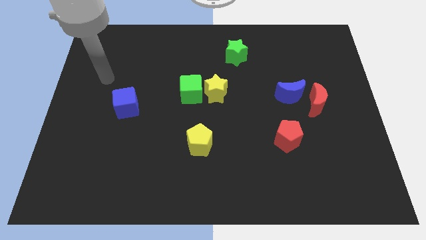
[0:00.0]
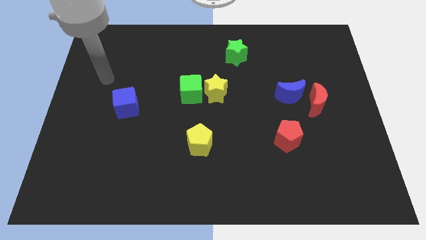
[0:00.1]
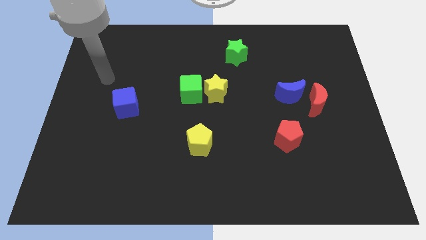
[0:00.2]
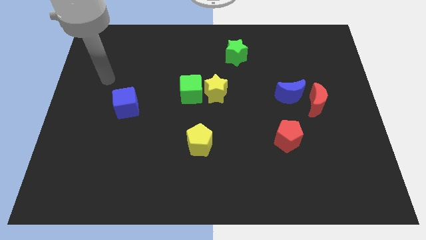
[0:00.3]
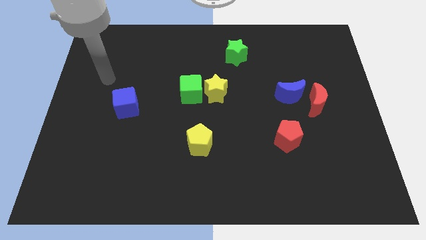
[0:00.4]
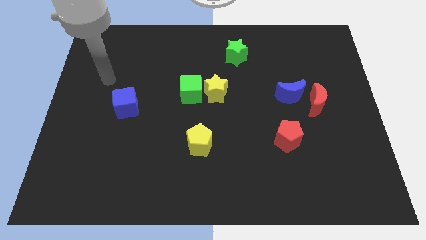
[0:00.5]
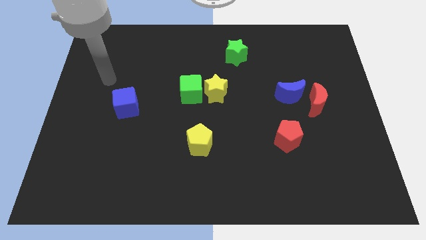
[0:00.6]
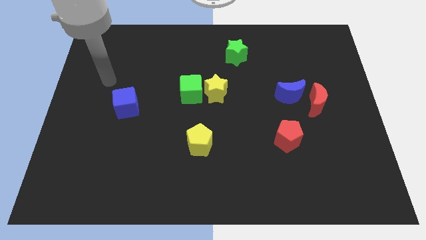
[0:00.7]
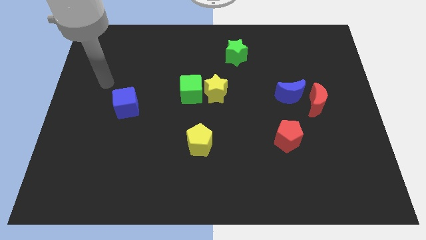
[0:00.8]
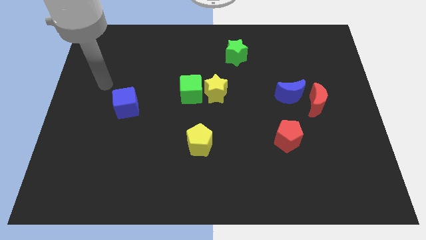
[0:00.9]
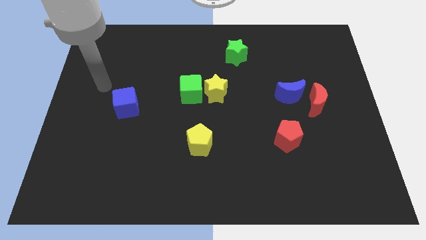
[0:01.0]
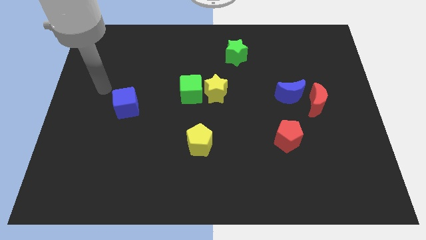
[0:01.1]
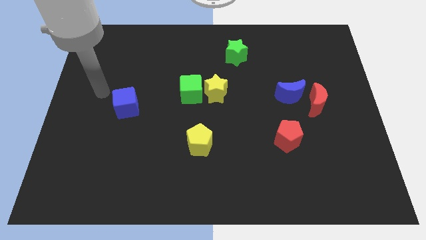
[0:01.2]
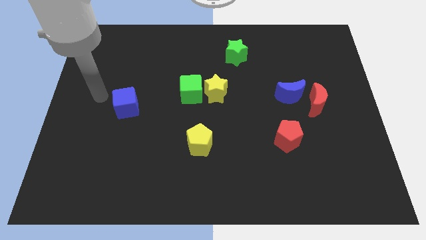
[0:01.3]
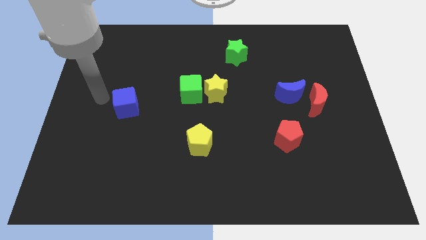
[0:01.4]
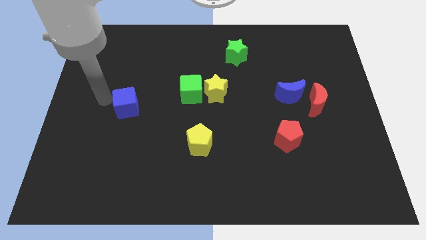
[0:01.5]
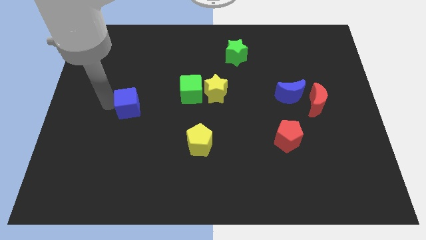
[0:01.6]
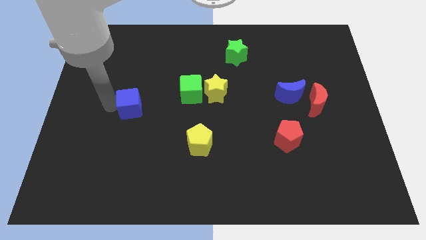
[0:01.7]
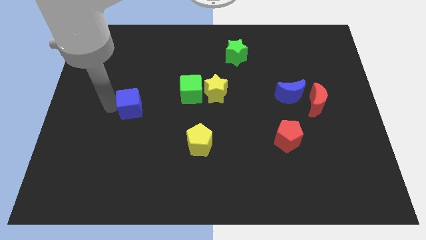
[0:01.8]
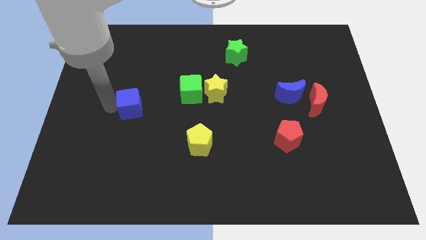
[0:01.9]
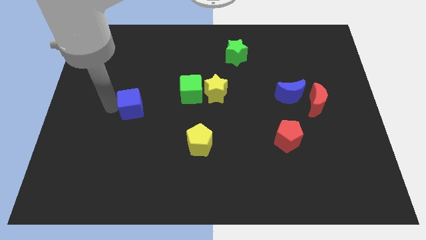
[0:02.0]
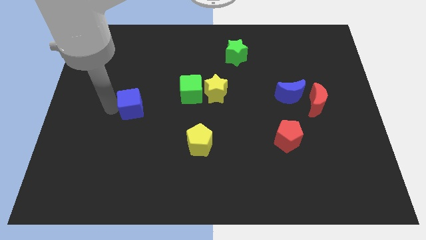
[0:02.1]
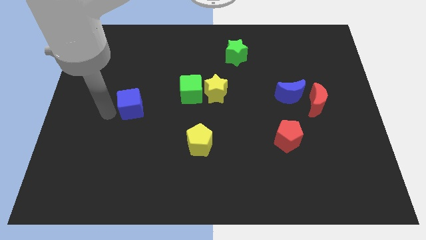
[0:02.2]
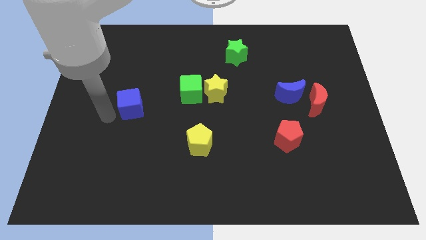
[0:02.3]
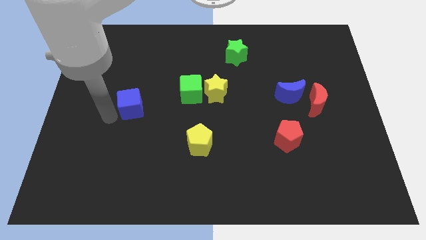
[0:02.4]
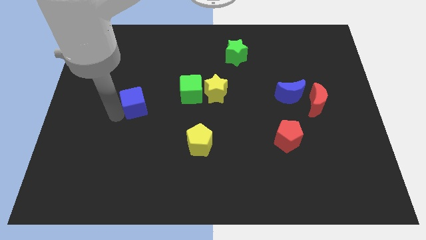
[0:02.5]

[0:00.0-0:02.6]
point the arm to the left of the blue cube

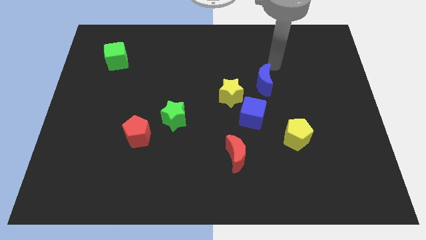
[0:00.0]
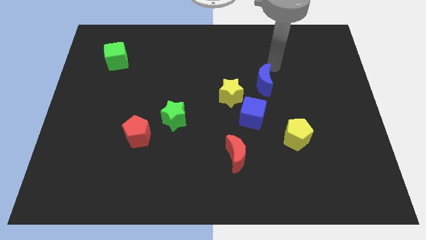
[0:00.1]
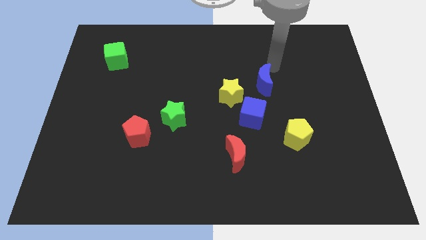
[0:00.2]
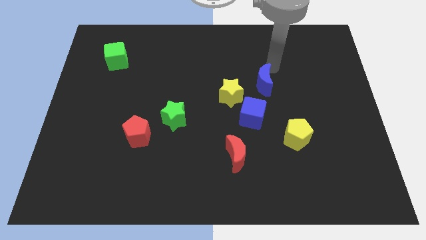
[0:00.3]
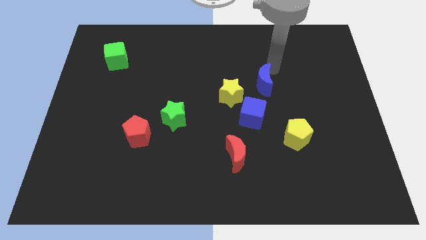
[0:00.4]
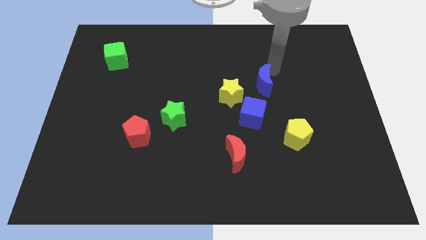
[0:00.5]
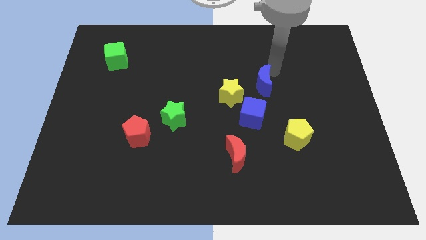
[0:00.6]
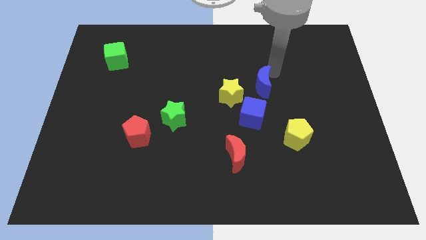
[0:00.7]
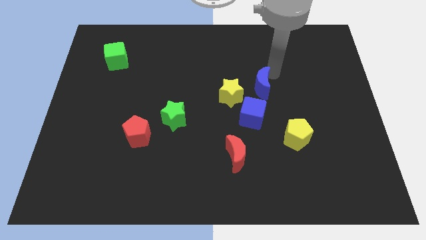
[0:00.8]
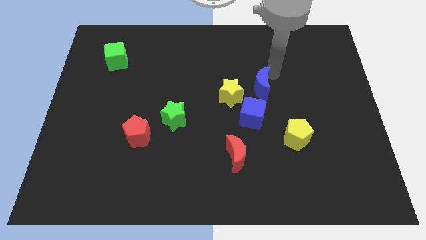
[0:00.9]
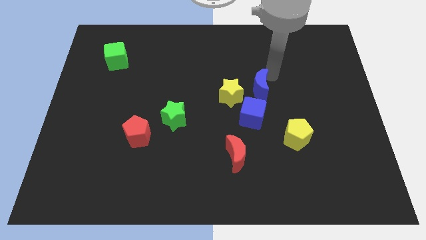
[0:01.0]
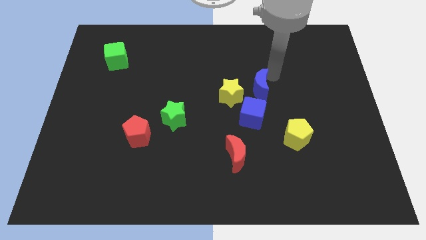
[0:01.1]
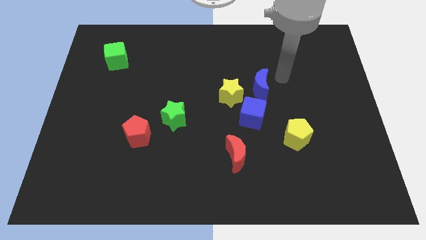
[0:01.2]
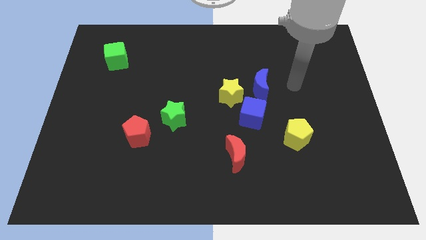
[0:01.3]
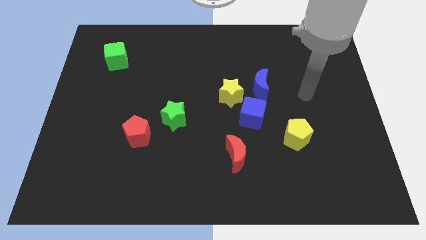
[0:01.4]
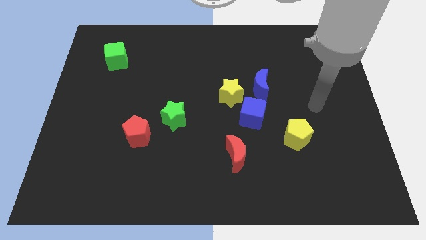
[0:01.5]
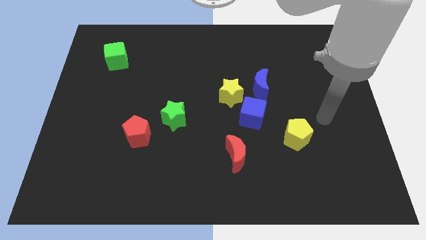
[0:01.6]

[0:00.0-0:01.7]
place the blue crescent to the top of the blue cube

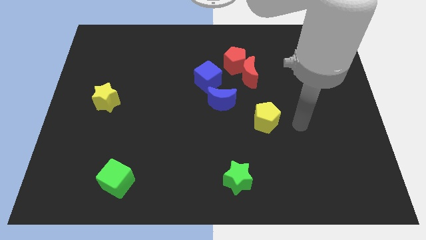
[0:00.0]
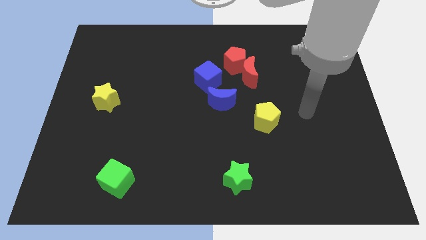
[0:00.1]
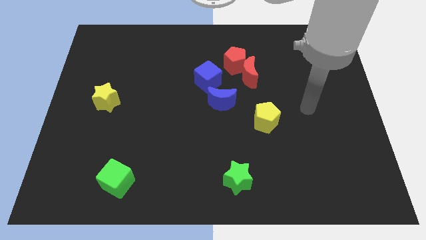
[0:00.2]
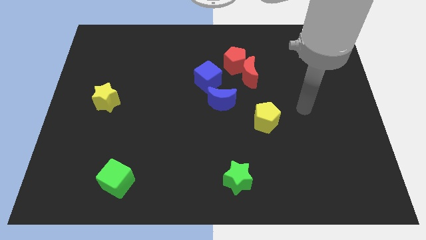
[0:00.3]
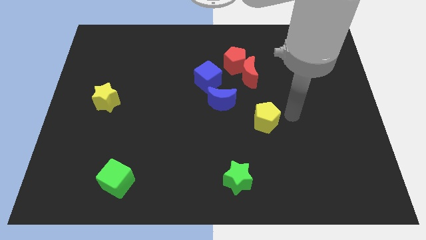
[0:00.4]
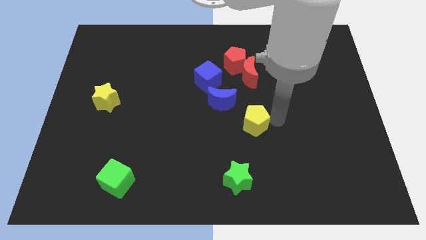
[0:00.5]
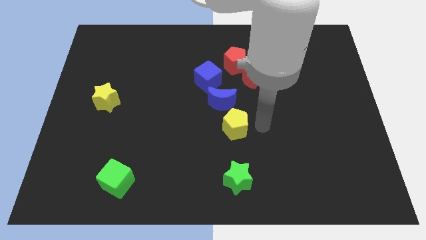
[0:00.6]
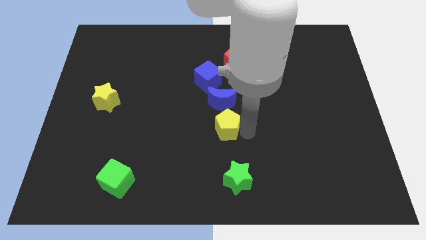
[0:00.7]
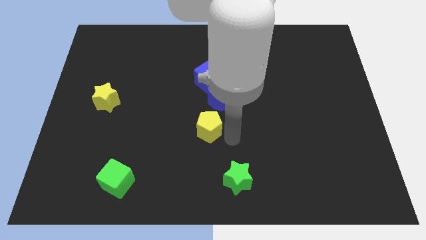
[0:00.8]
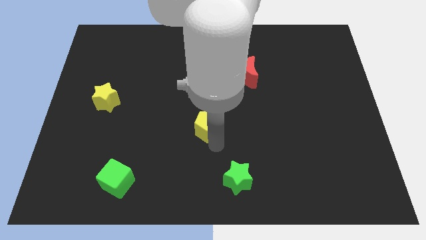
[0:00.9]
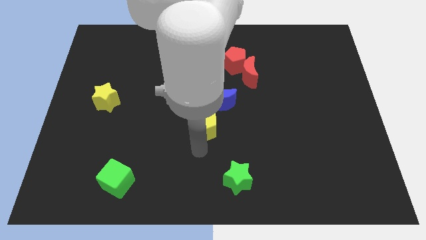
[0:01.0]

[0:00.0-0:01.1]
slide yellow pentagon to the bottom left of blue moon

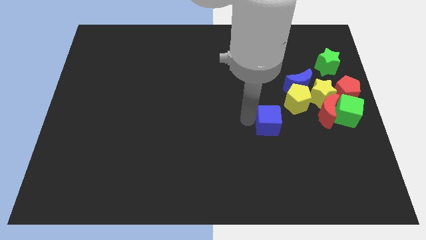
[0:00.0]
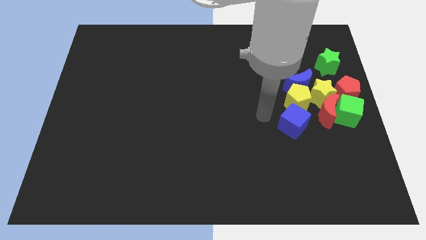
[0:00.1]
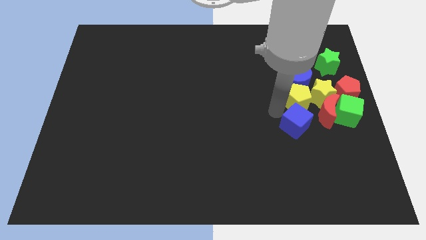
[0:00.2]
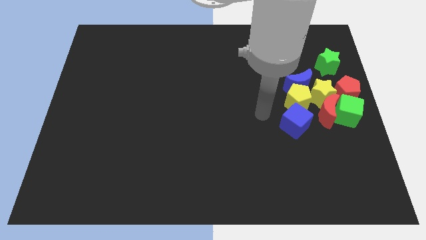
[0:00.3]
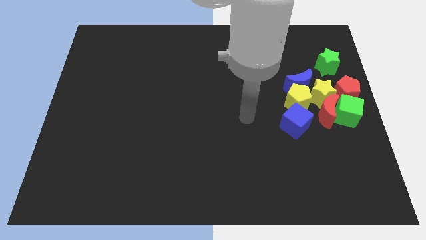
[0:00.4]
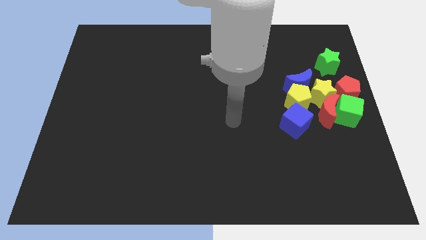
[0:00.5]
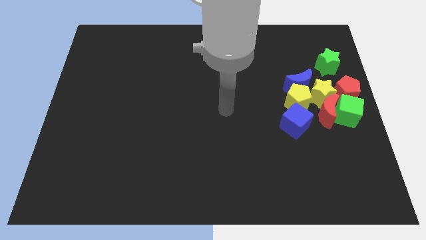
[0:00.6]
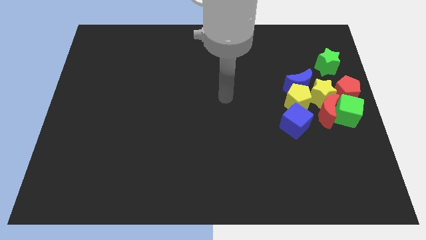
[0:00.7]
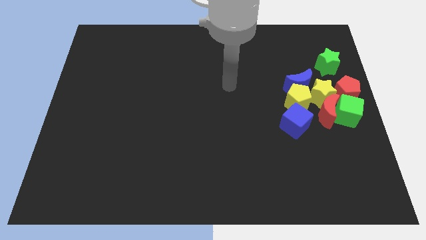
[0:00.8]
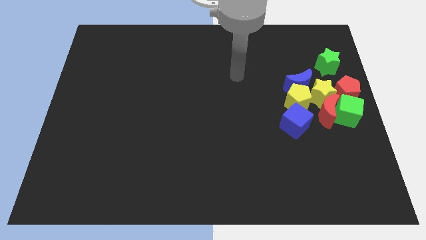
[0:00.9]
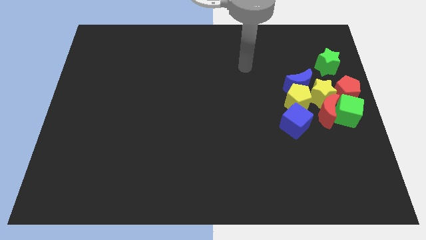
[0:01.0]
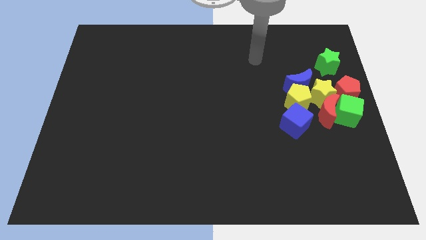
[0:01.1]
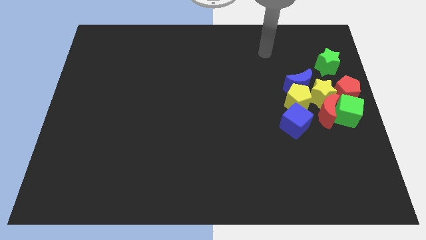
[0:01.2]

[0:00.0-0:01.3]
move the blue square into the yellow pentagon

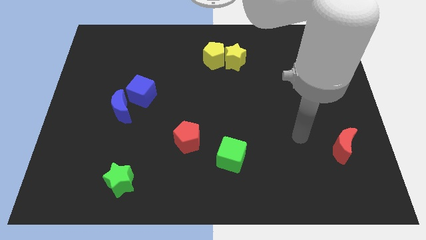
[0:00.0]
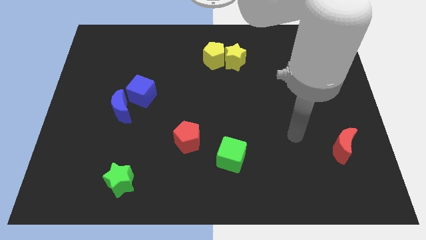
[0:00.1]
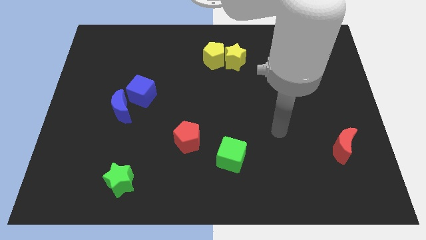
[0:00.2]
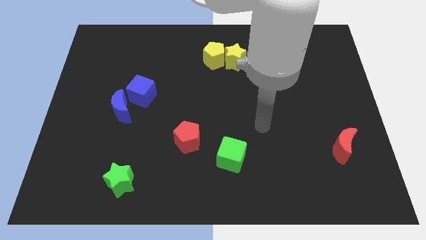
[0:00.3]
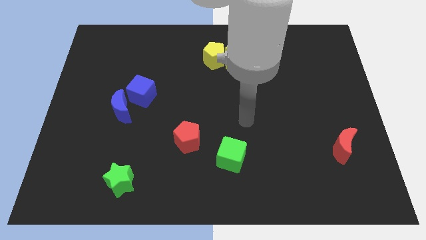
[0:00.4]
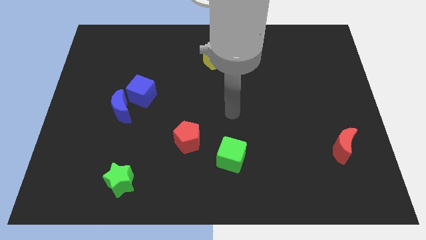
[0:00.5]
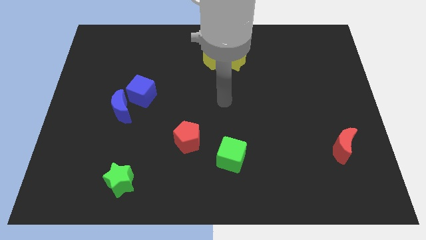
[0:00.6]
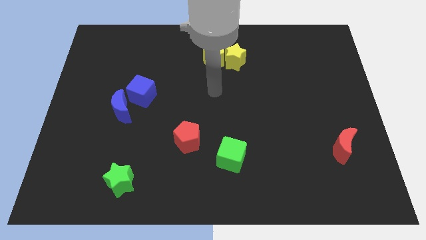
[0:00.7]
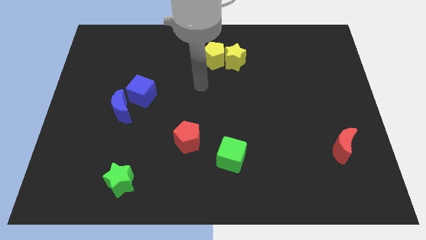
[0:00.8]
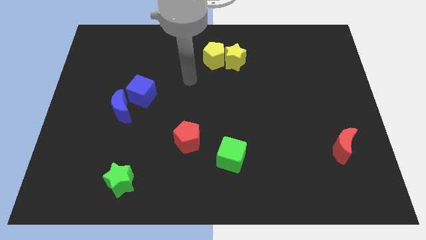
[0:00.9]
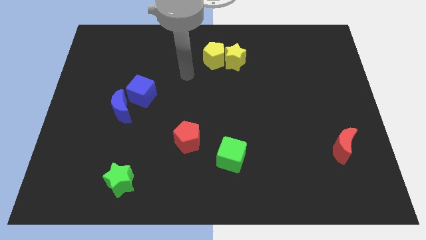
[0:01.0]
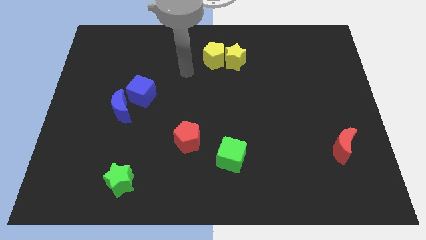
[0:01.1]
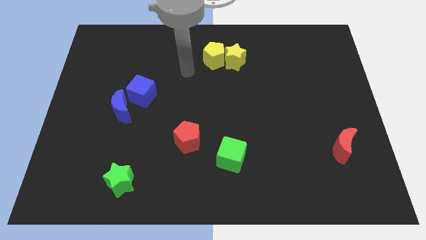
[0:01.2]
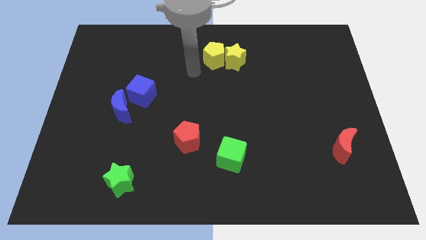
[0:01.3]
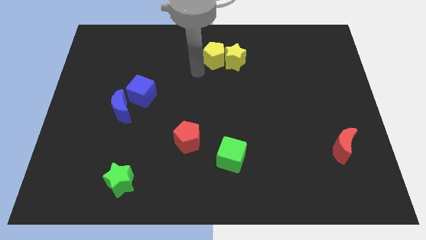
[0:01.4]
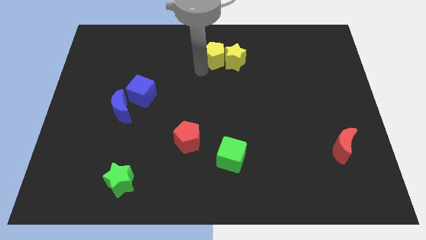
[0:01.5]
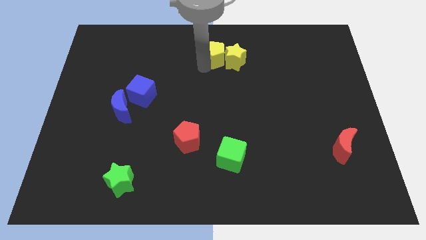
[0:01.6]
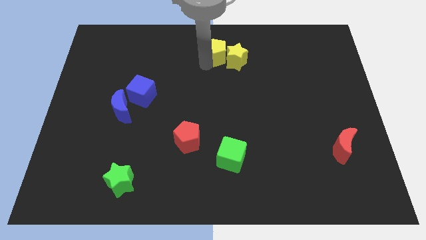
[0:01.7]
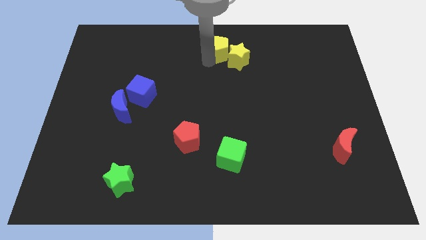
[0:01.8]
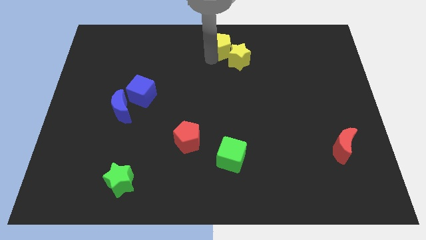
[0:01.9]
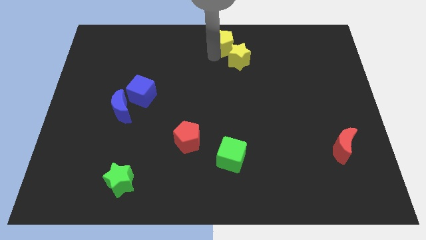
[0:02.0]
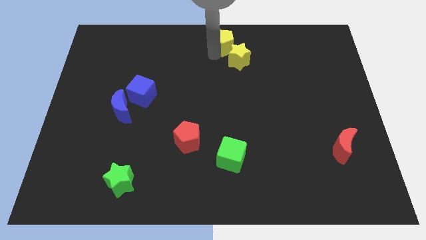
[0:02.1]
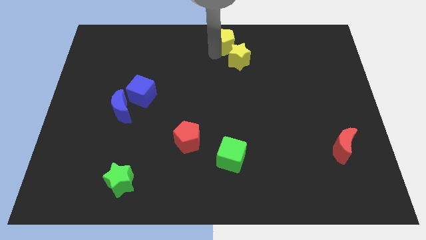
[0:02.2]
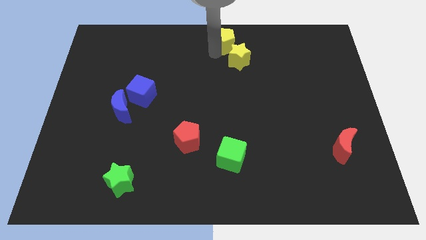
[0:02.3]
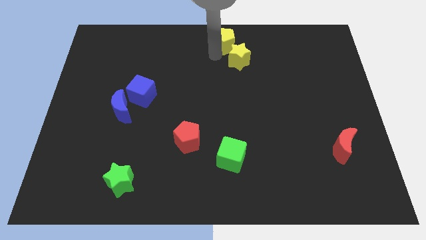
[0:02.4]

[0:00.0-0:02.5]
push the yellow pentagon slightly to the top
